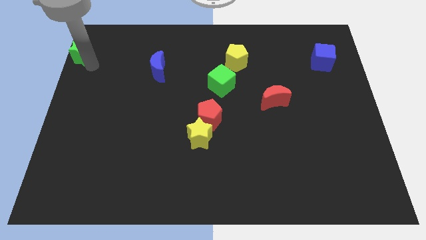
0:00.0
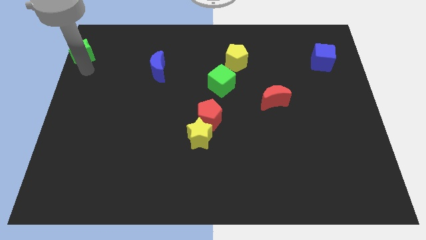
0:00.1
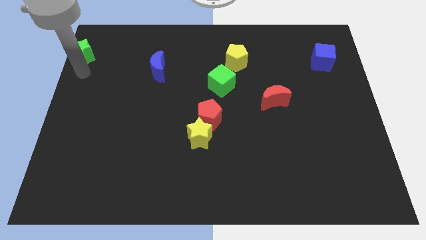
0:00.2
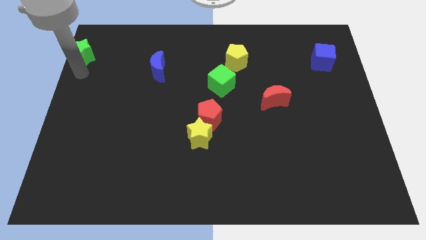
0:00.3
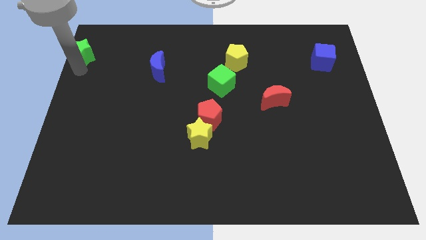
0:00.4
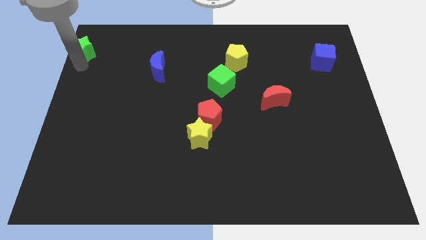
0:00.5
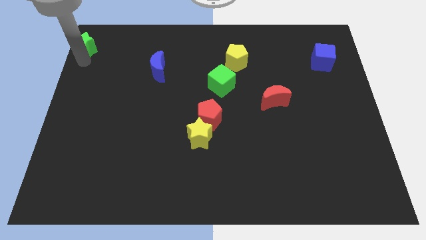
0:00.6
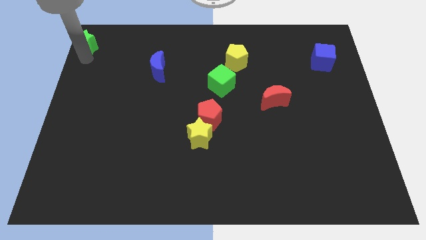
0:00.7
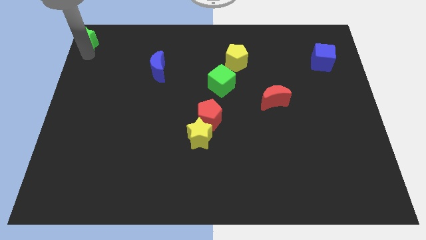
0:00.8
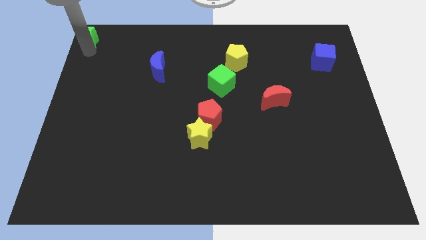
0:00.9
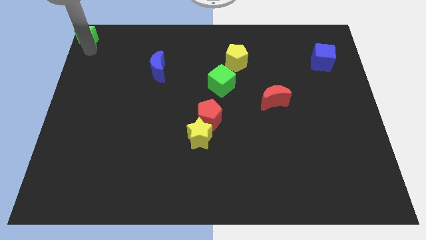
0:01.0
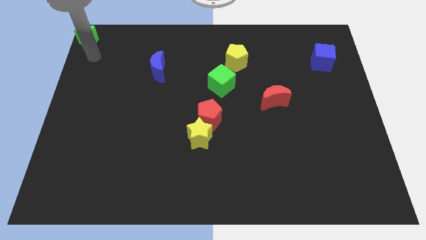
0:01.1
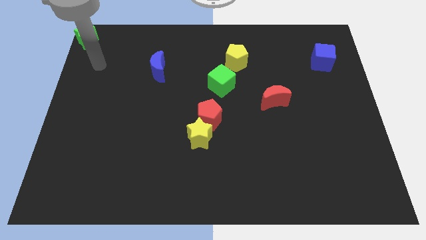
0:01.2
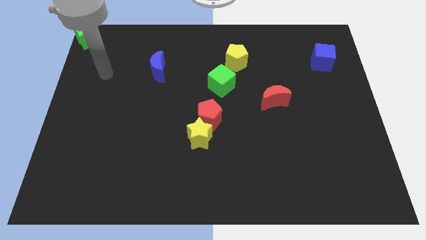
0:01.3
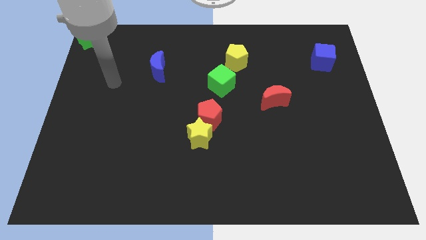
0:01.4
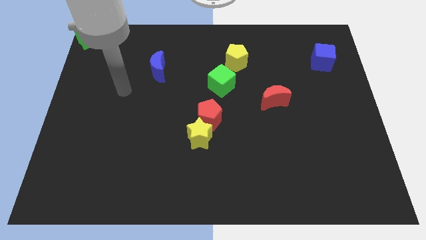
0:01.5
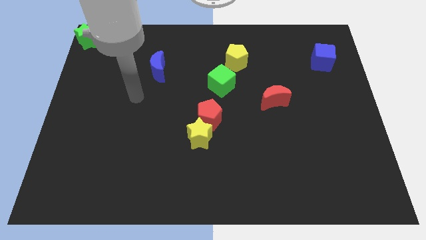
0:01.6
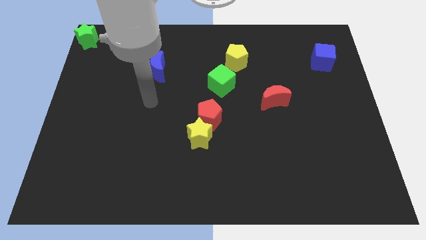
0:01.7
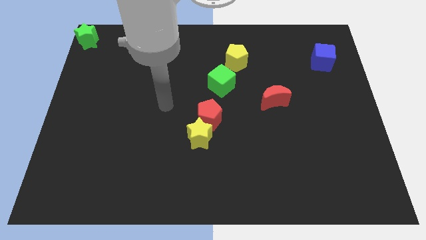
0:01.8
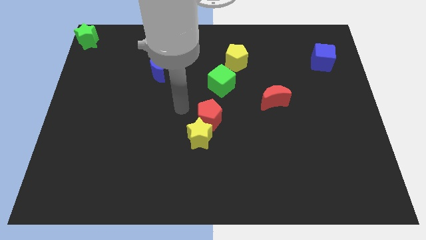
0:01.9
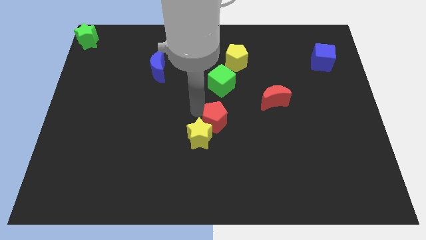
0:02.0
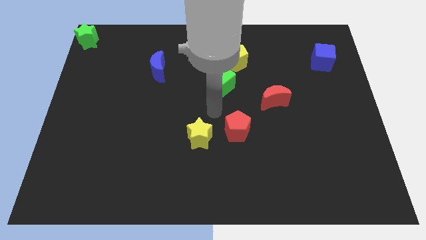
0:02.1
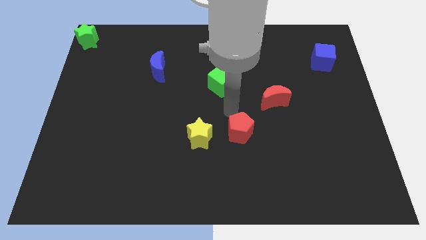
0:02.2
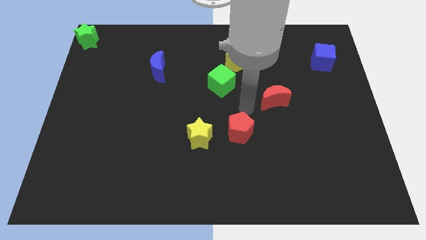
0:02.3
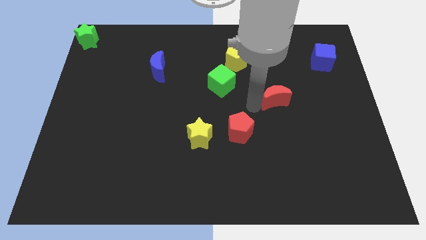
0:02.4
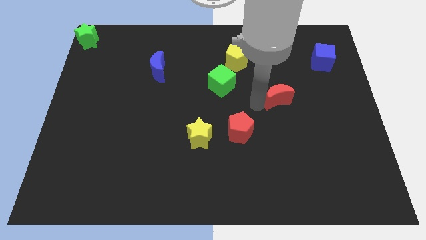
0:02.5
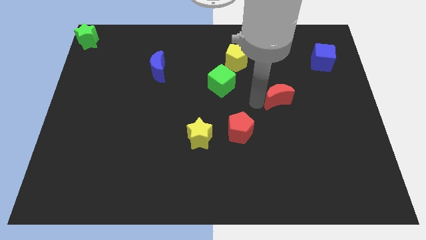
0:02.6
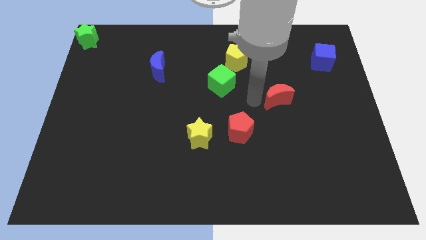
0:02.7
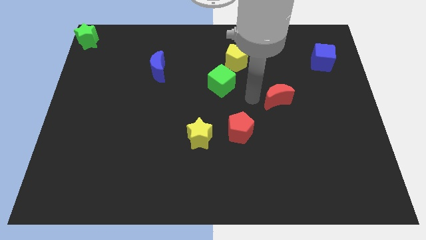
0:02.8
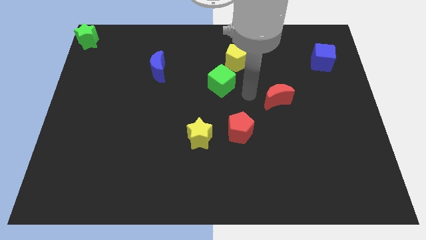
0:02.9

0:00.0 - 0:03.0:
place red pentagon to the right of yellow star

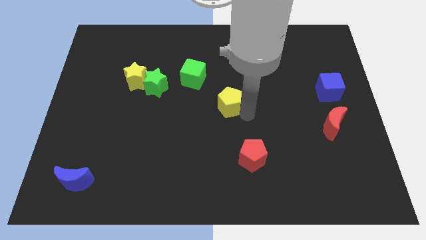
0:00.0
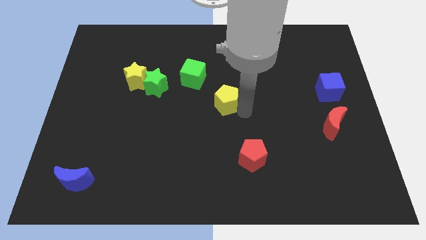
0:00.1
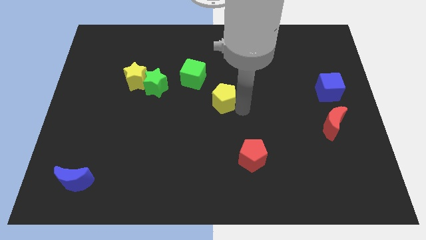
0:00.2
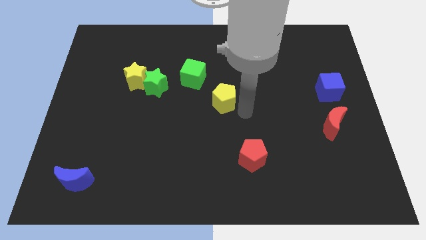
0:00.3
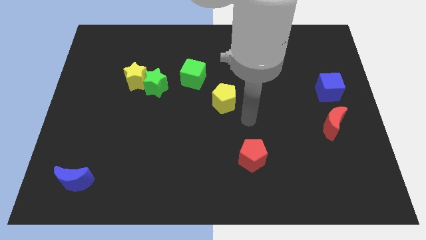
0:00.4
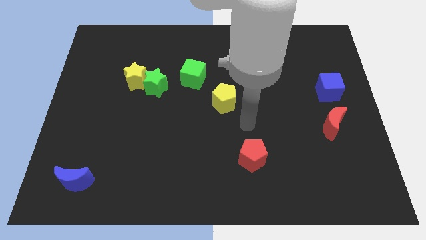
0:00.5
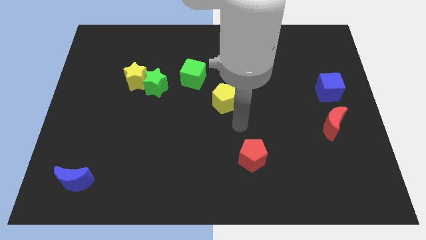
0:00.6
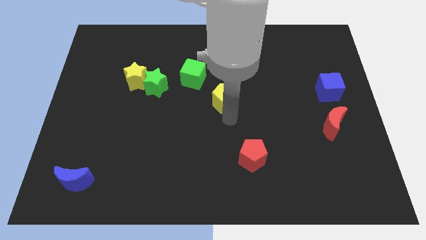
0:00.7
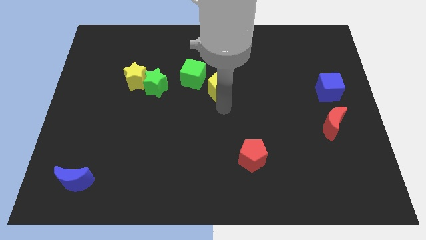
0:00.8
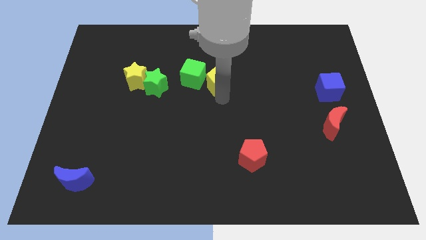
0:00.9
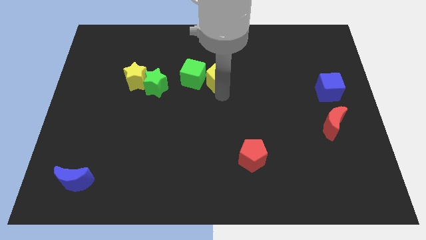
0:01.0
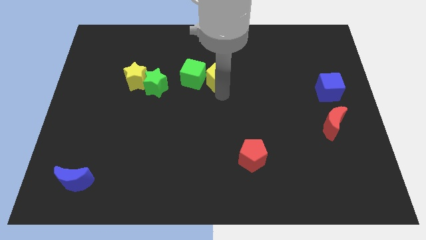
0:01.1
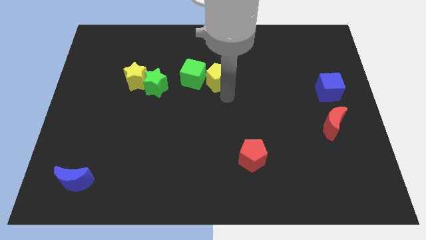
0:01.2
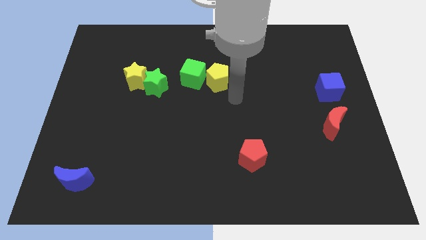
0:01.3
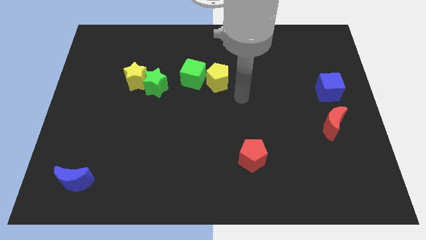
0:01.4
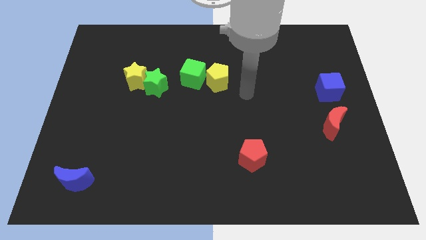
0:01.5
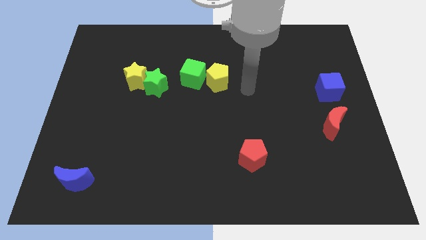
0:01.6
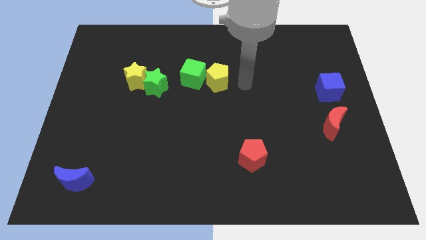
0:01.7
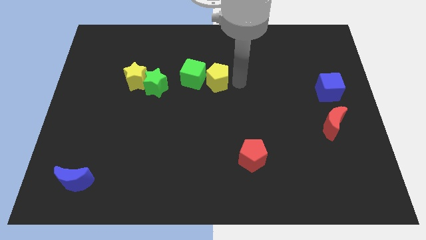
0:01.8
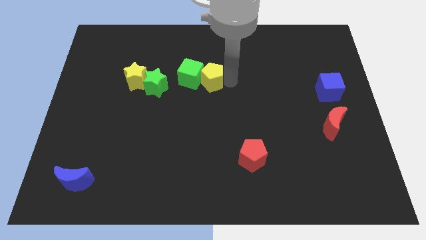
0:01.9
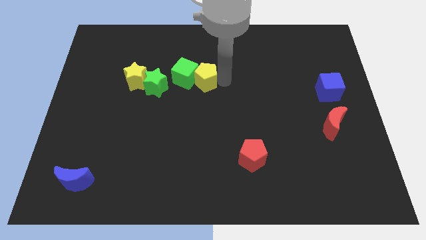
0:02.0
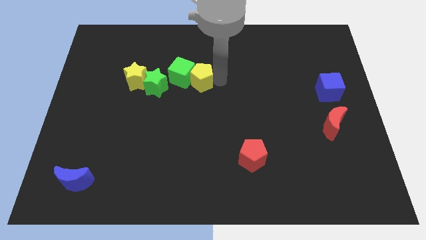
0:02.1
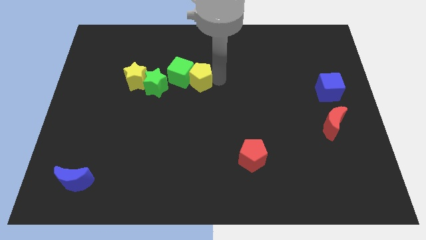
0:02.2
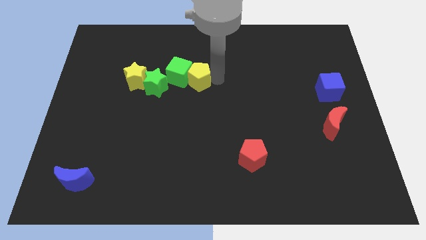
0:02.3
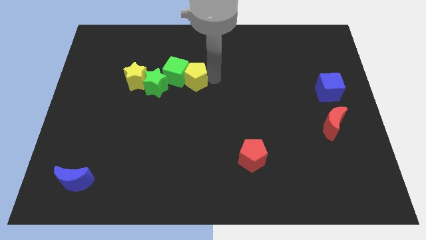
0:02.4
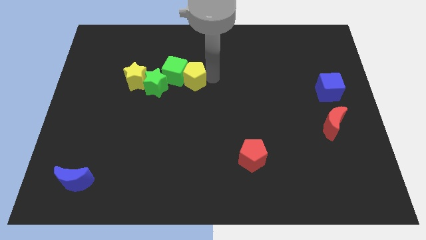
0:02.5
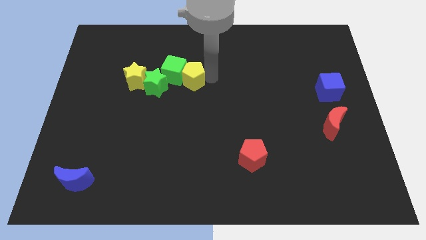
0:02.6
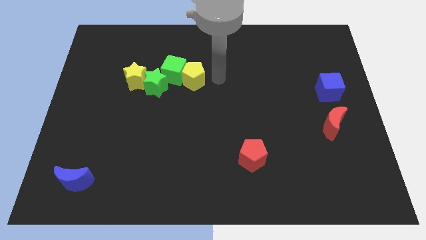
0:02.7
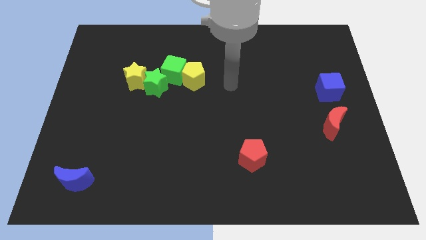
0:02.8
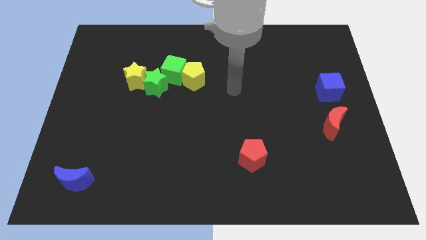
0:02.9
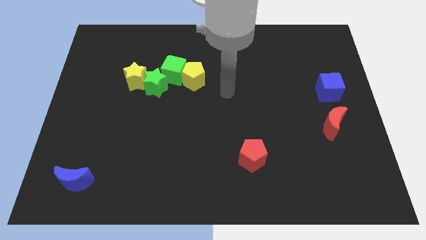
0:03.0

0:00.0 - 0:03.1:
move the yellow pentagon into the green cube

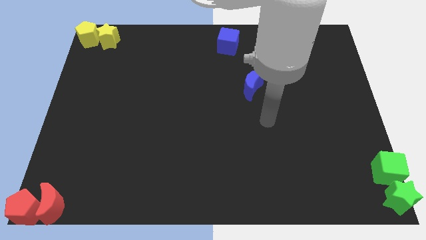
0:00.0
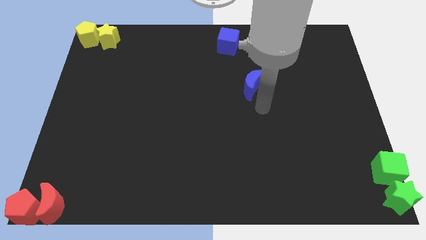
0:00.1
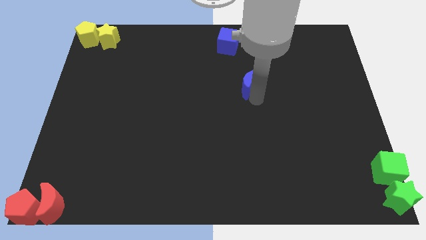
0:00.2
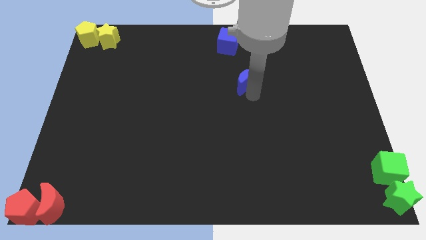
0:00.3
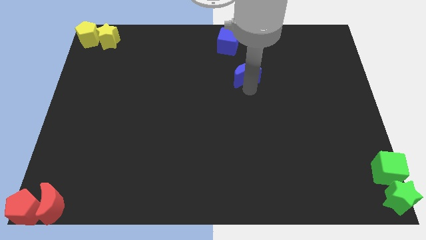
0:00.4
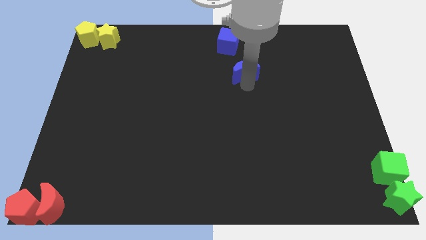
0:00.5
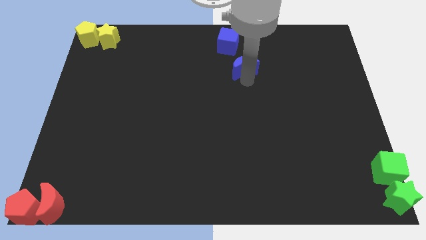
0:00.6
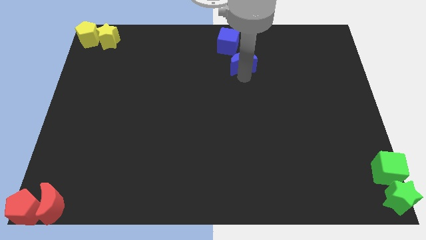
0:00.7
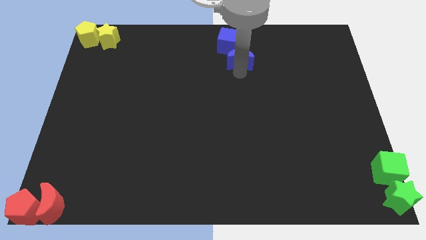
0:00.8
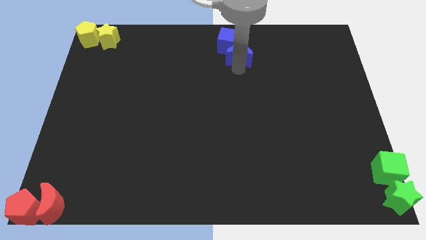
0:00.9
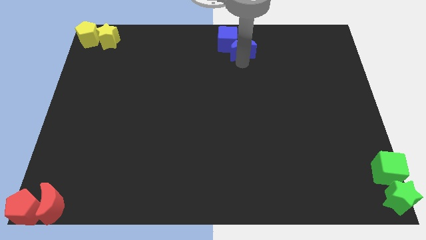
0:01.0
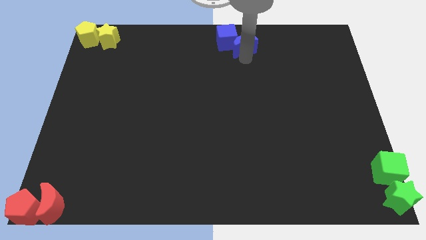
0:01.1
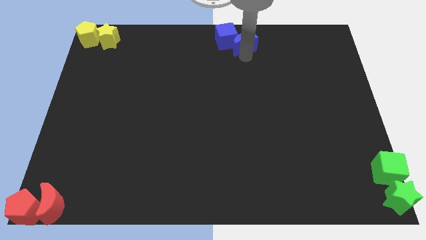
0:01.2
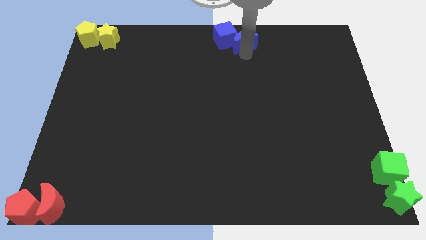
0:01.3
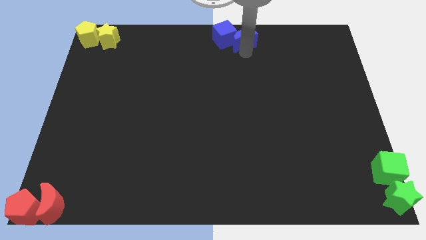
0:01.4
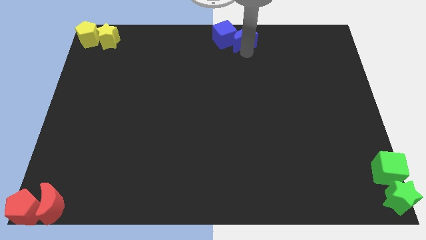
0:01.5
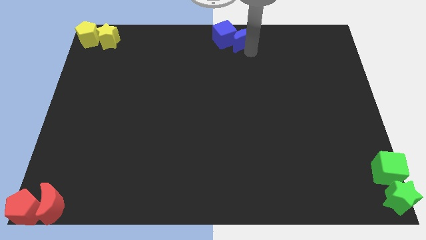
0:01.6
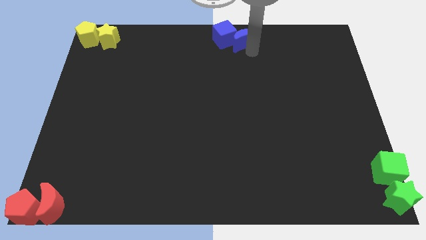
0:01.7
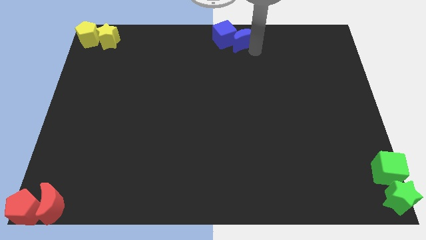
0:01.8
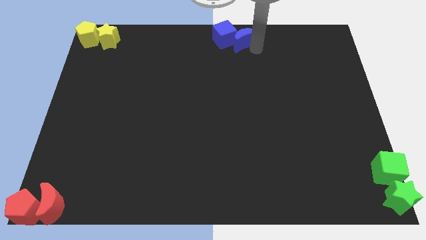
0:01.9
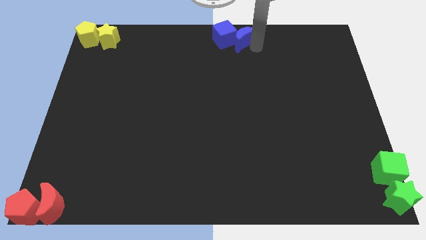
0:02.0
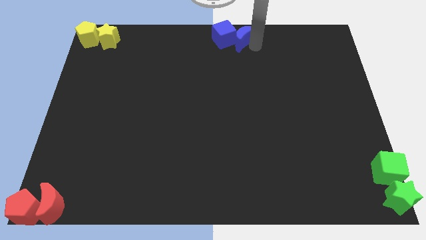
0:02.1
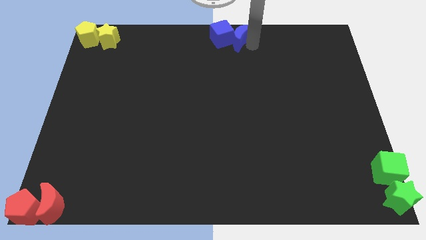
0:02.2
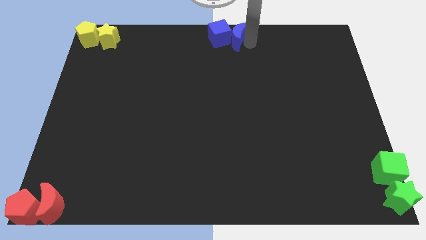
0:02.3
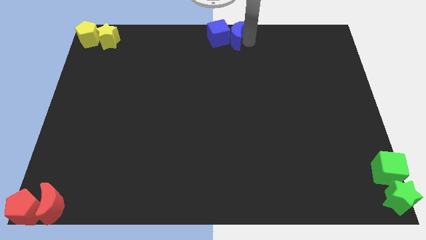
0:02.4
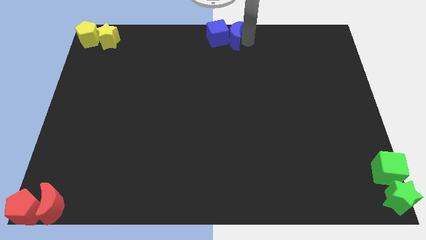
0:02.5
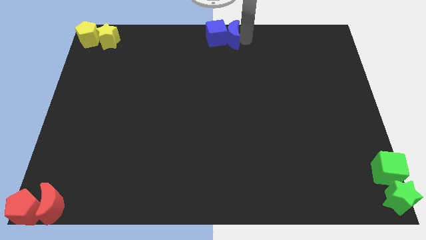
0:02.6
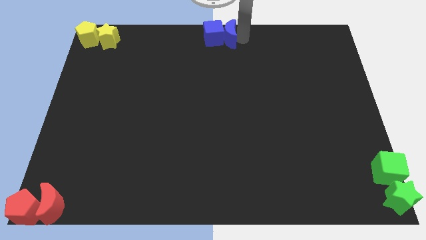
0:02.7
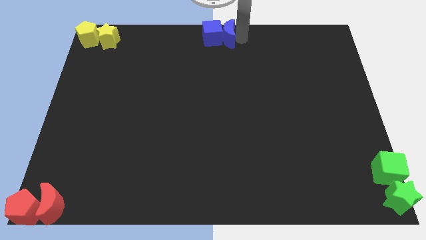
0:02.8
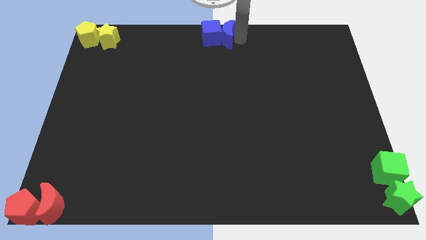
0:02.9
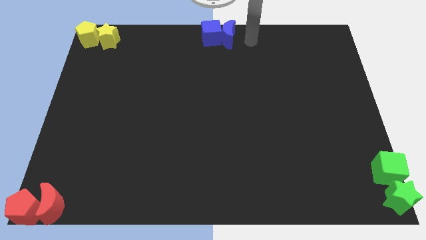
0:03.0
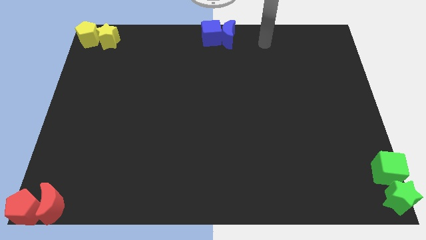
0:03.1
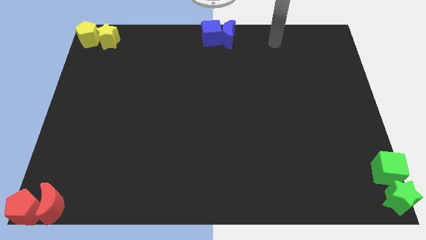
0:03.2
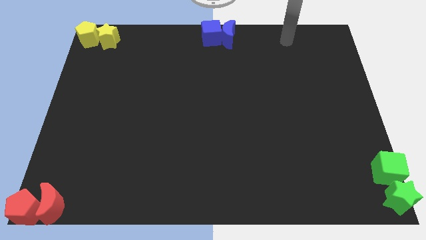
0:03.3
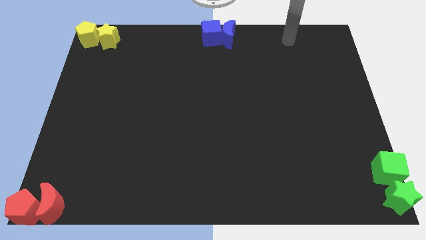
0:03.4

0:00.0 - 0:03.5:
push the blue crescent to the right of the blue cube at the top center of the board
